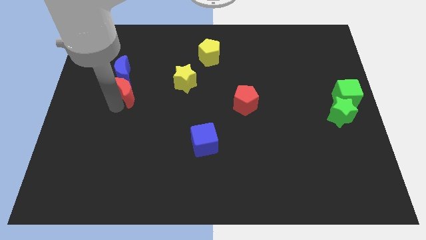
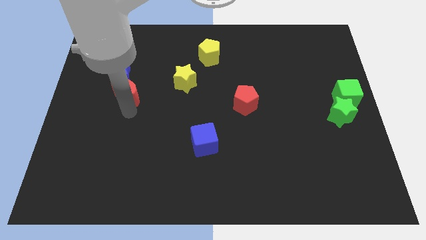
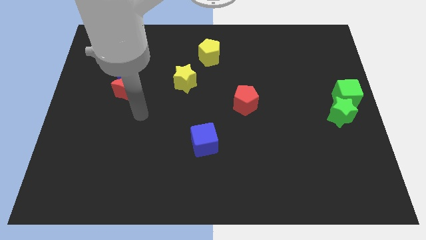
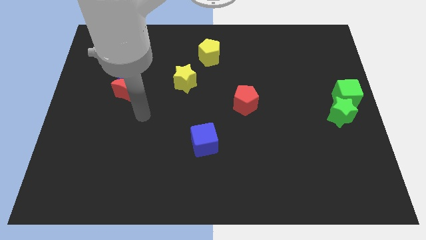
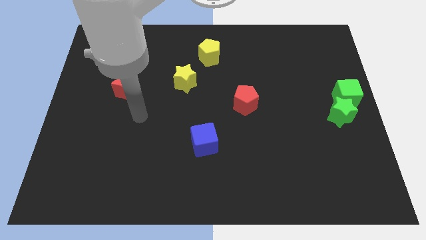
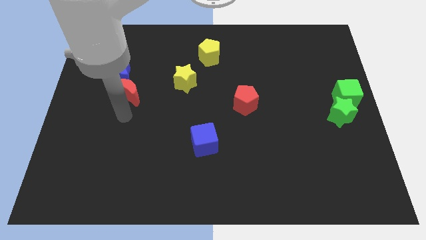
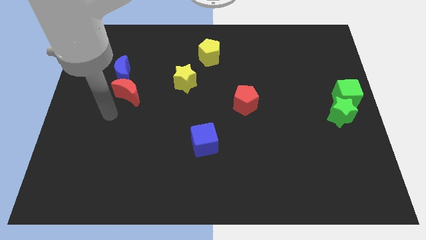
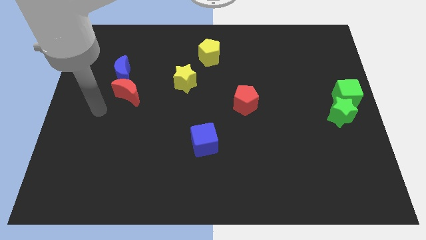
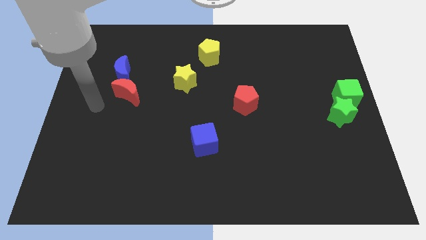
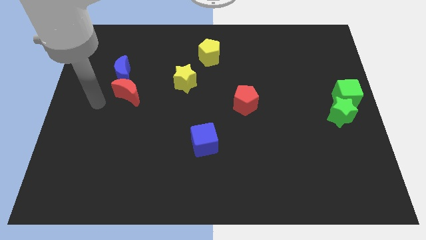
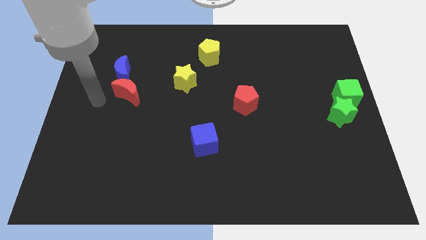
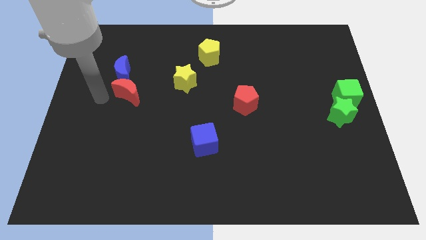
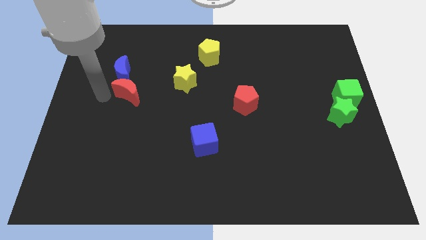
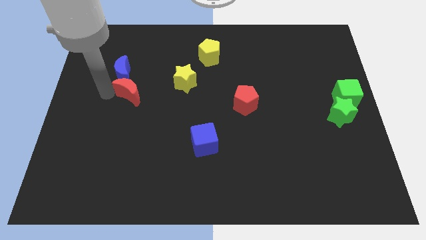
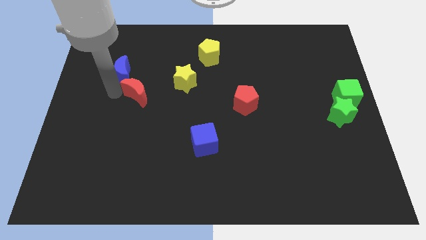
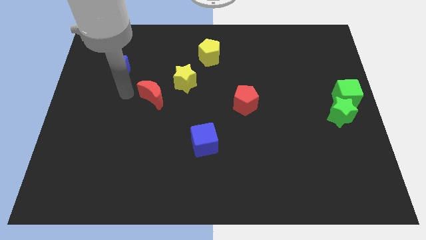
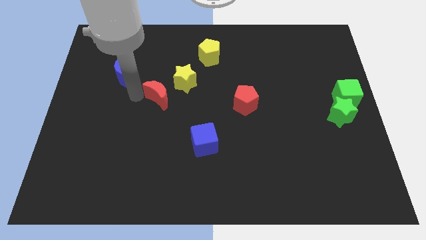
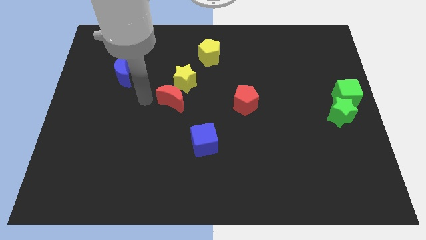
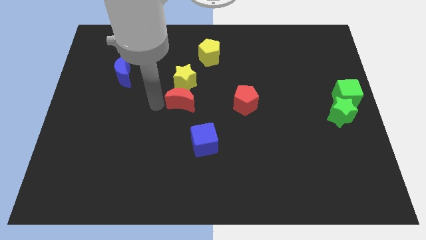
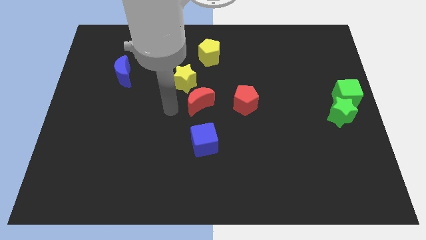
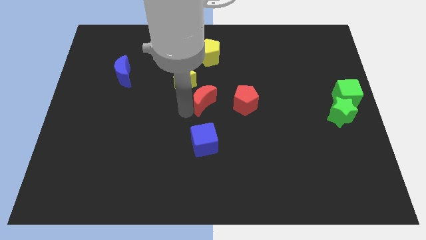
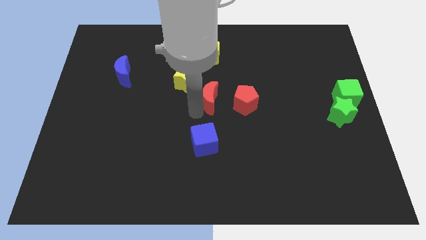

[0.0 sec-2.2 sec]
move the red crescent to the center

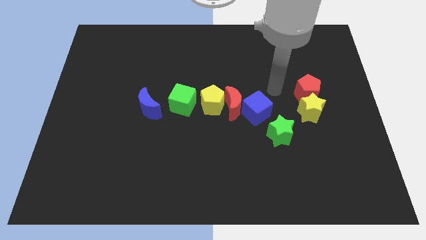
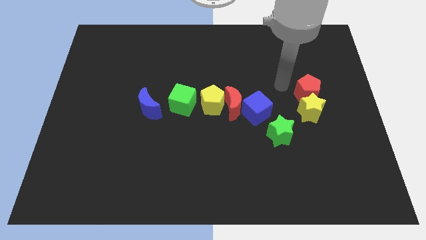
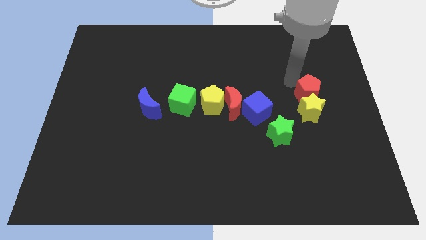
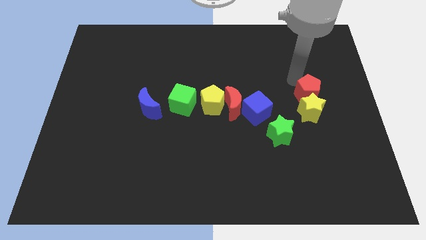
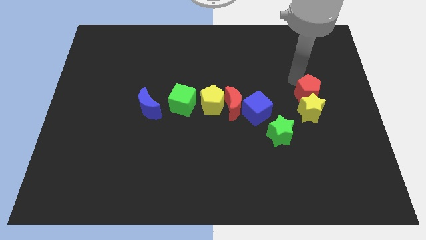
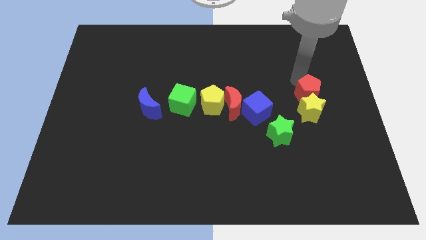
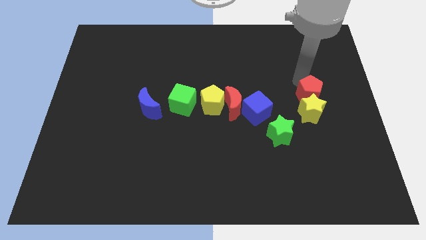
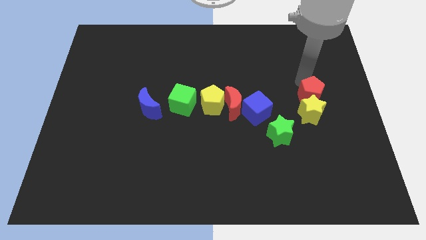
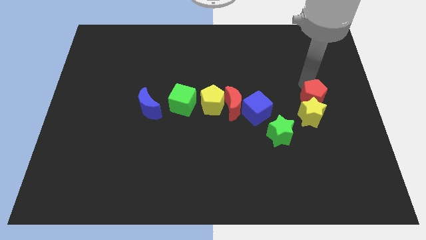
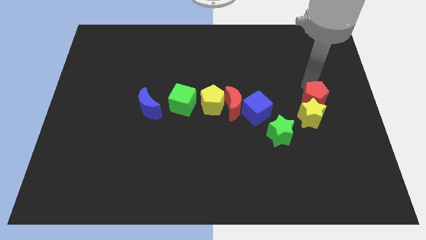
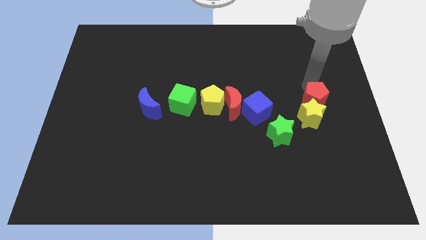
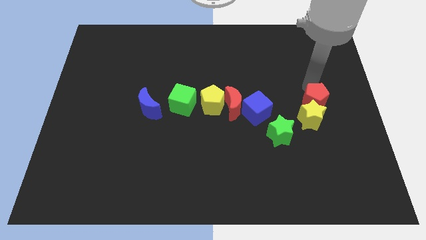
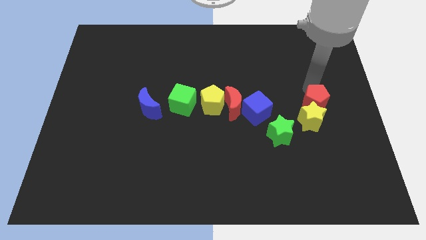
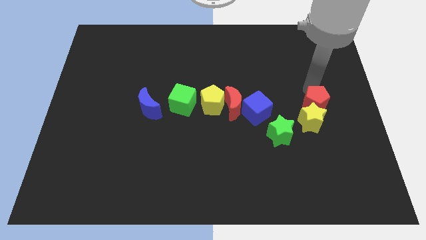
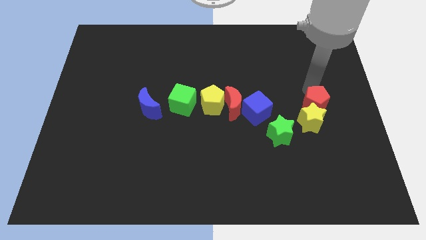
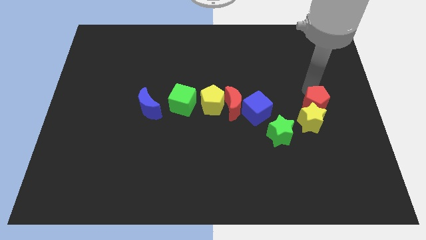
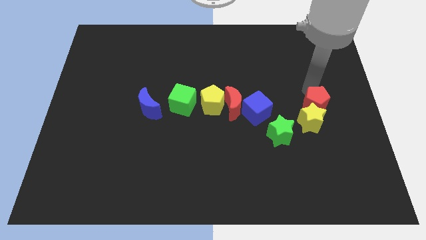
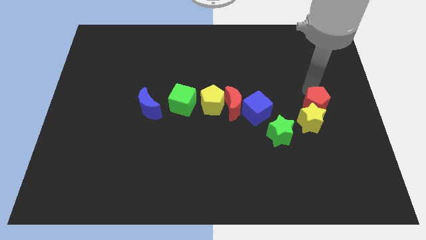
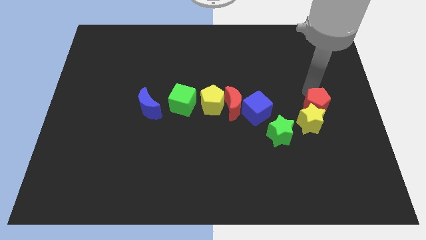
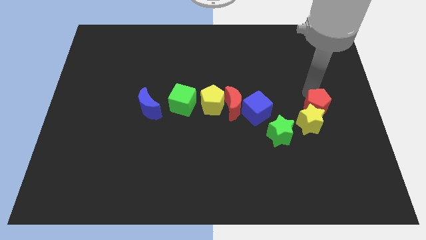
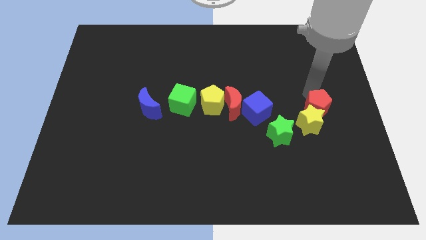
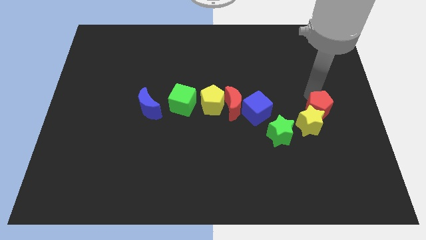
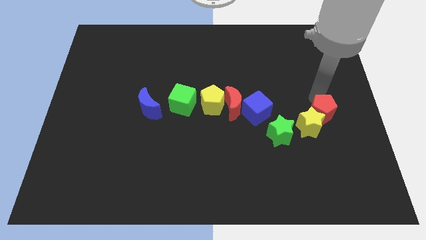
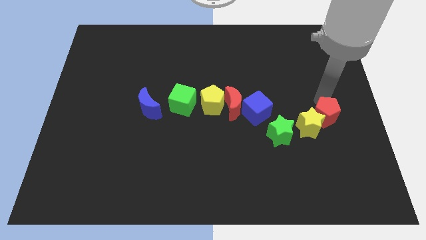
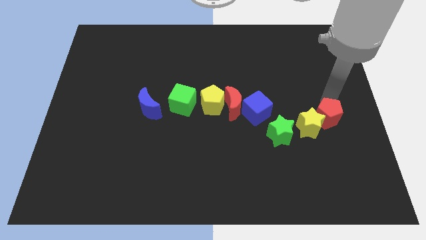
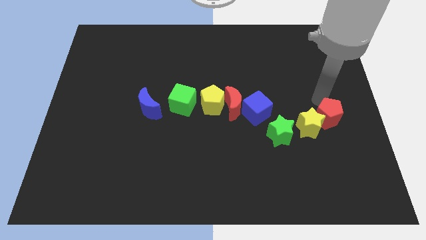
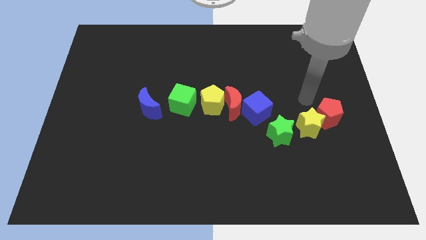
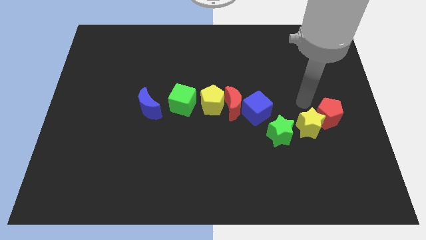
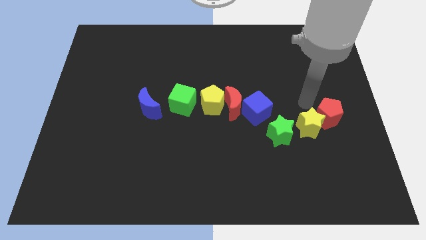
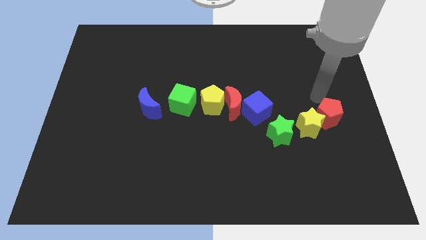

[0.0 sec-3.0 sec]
push the yellow star and red penatgom downward

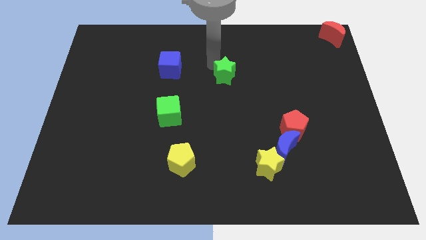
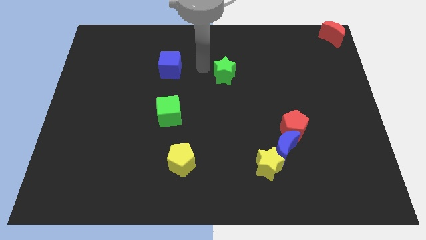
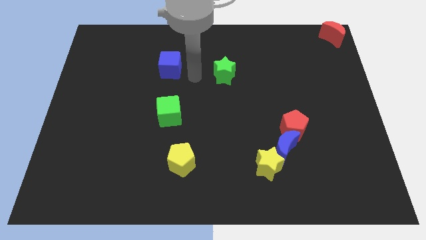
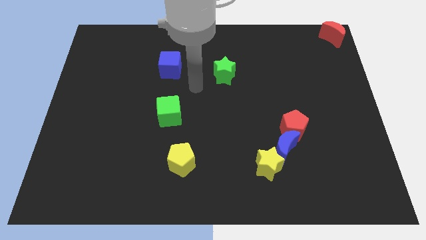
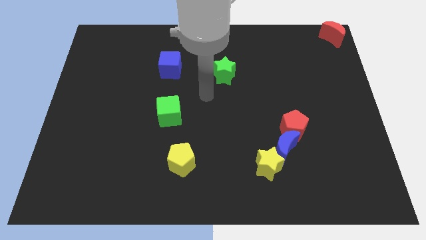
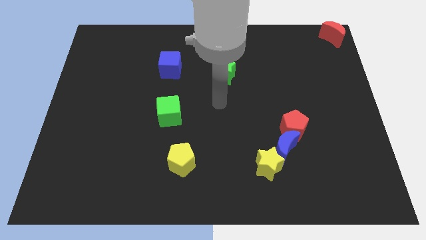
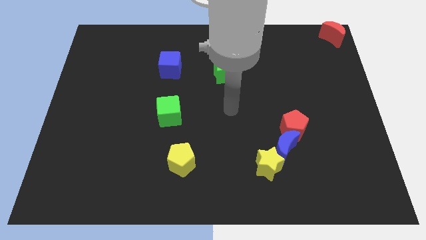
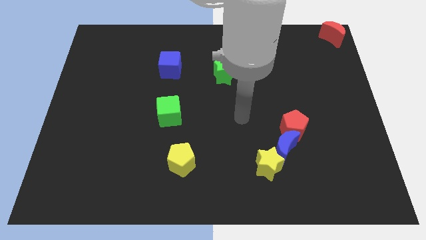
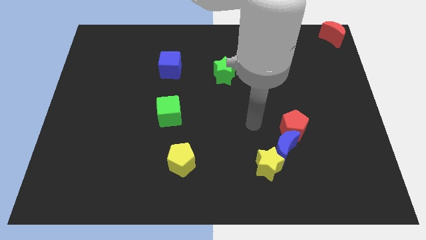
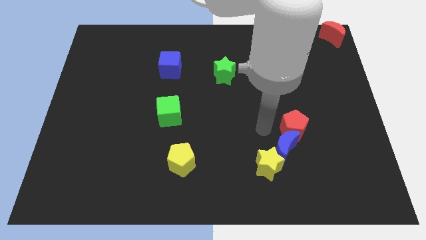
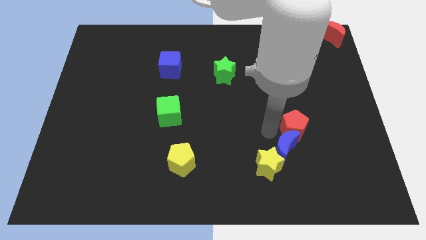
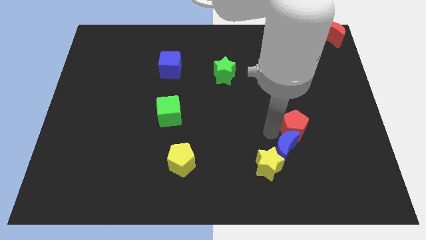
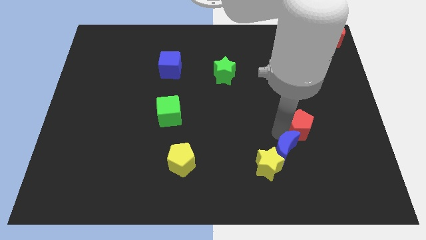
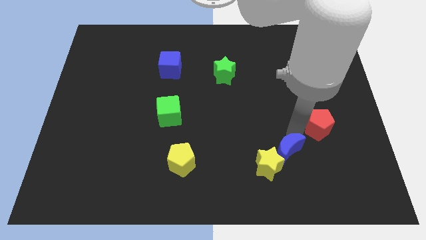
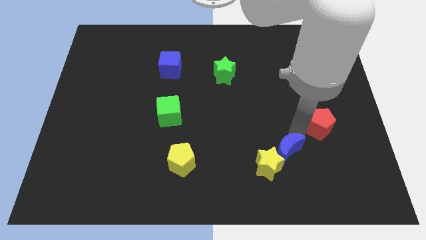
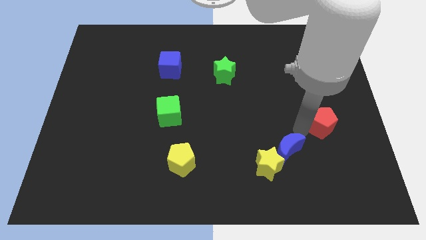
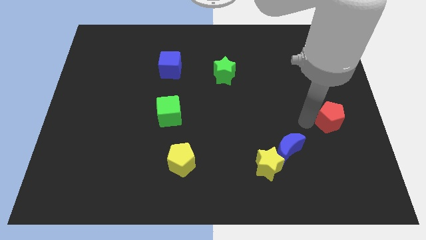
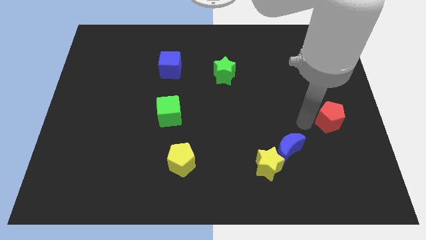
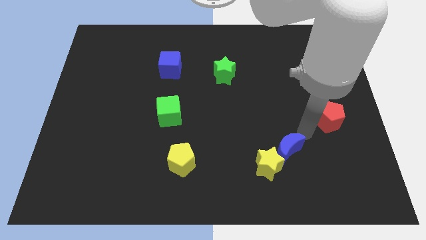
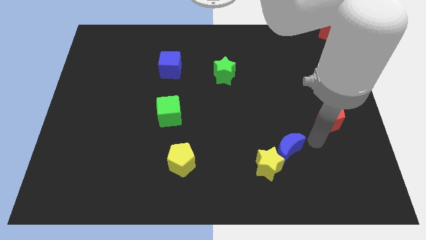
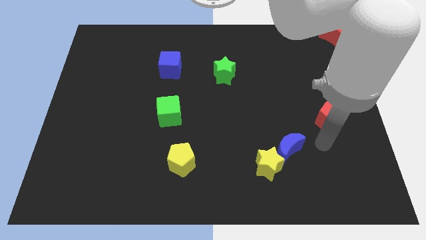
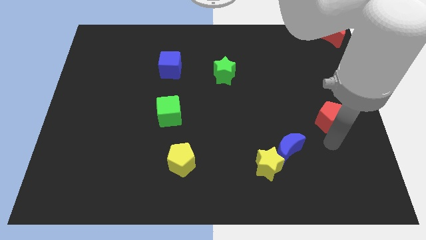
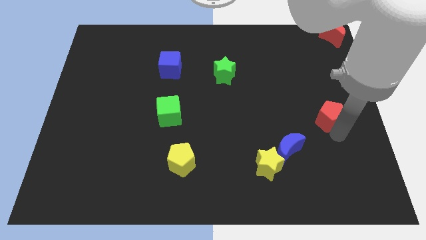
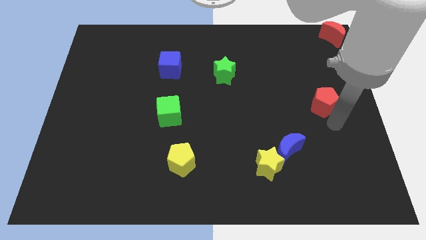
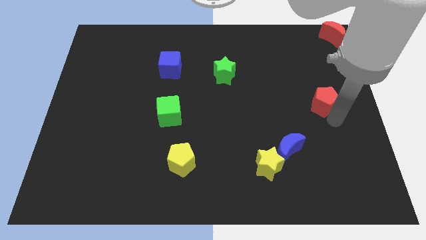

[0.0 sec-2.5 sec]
slightly move the red pentagon to its right

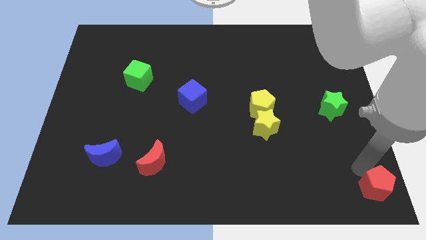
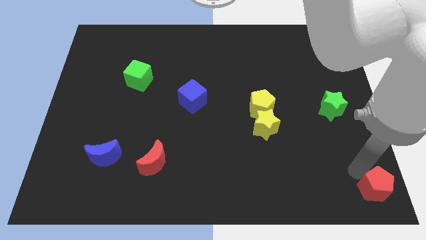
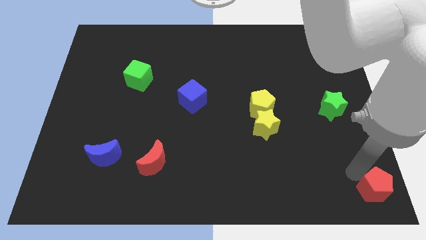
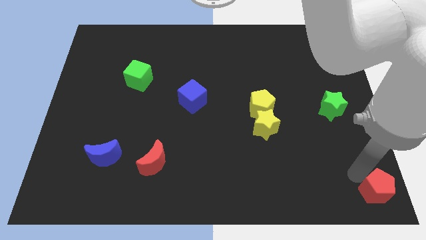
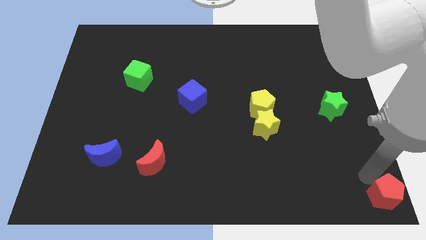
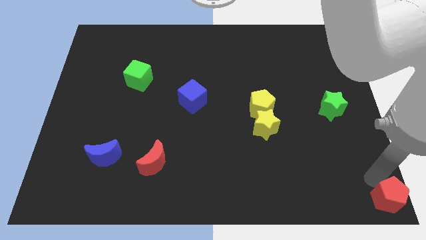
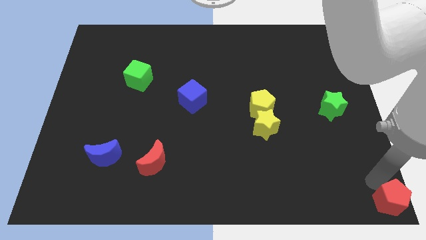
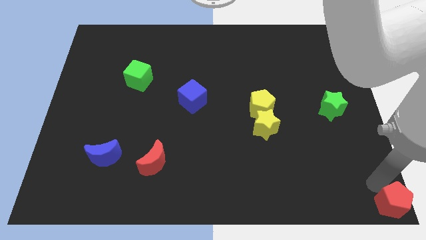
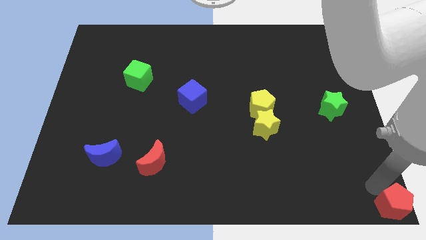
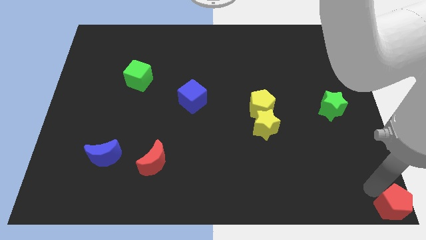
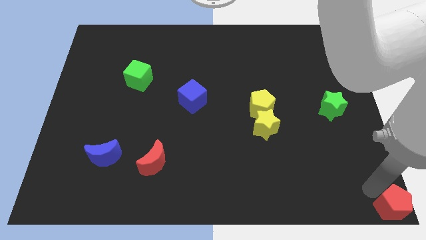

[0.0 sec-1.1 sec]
place the red pentagon at the bottom right corner of the board

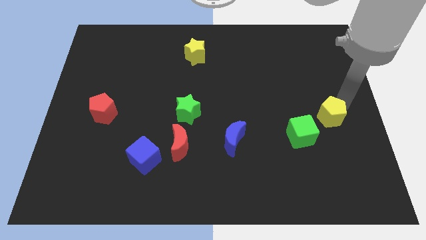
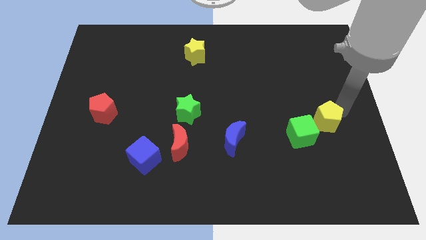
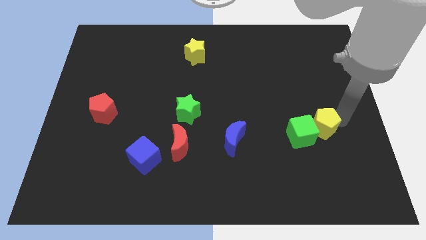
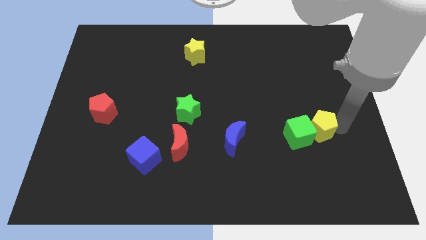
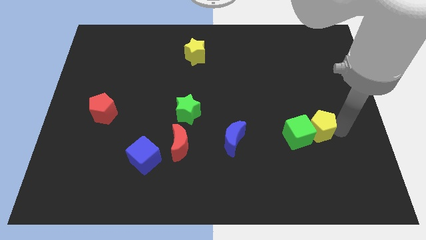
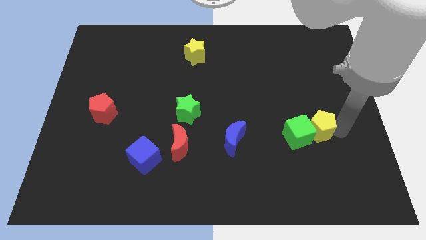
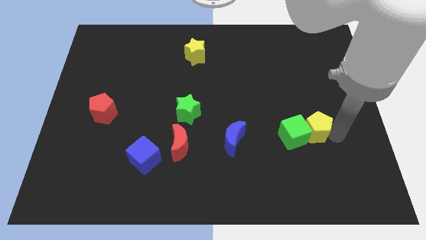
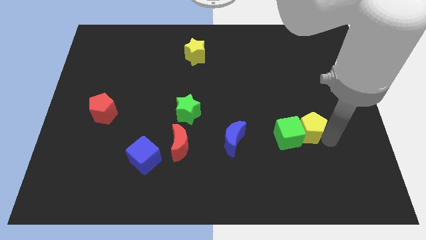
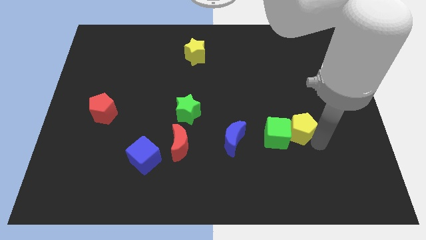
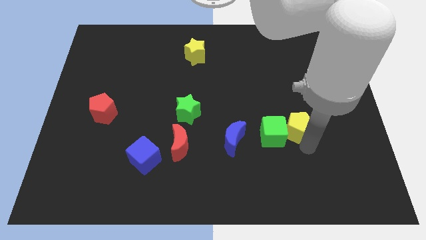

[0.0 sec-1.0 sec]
move the yellow pentagon right to the green cube
